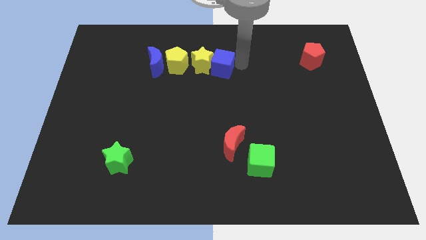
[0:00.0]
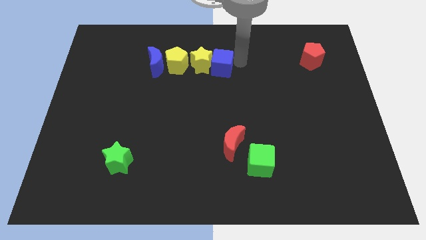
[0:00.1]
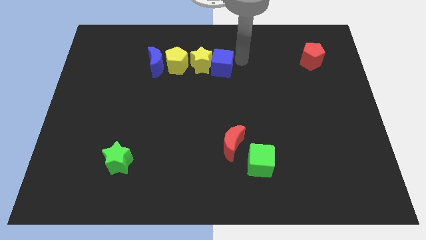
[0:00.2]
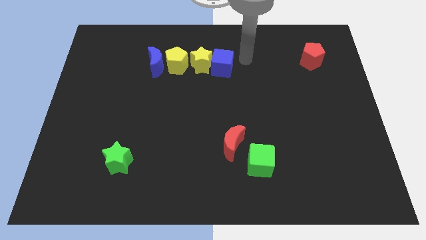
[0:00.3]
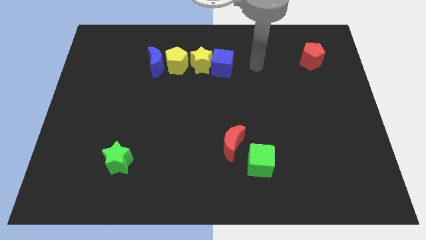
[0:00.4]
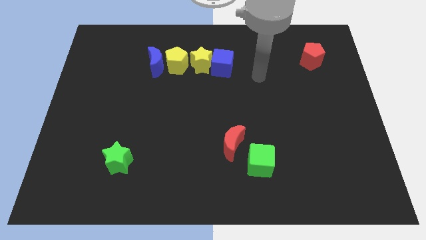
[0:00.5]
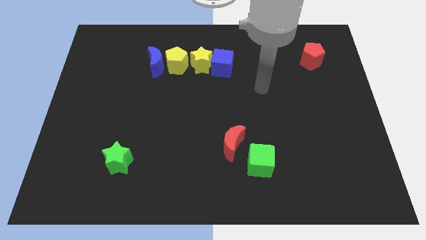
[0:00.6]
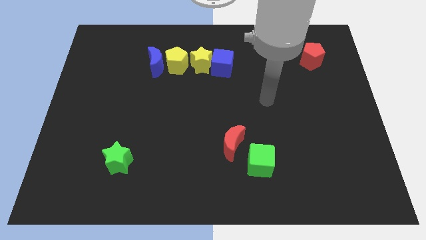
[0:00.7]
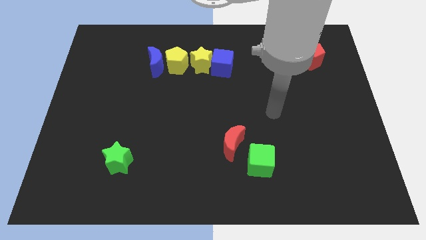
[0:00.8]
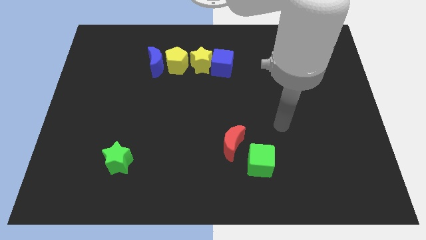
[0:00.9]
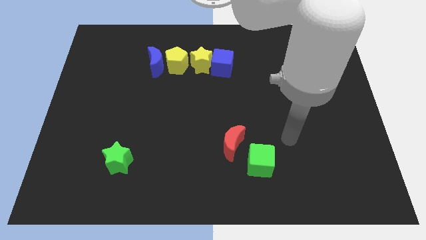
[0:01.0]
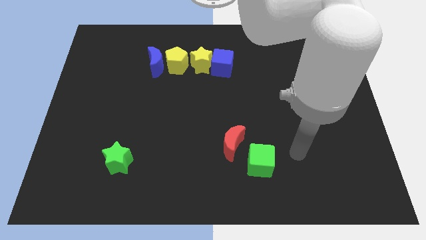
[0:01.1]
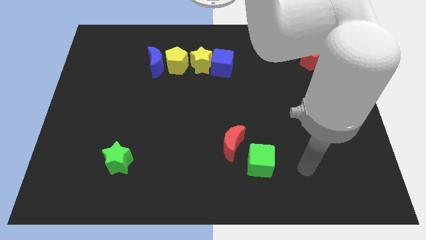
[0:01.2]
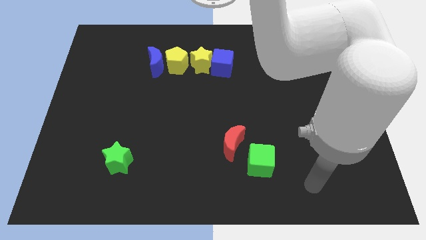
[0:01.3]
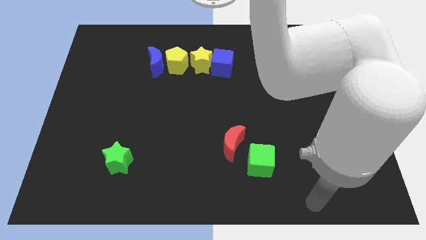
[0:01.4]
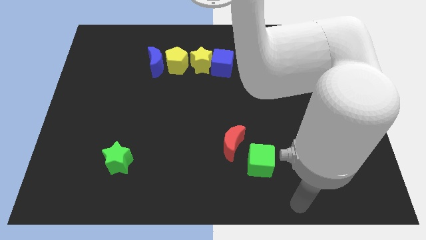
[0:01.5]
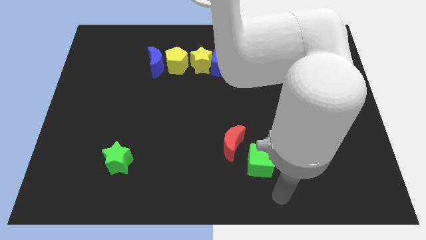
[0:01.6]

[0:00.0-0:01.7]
move your arm away from the blue cube

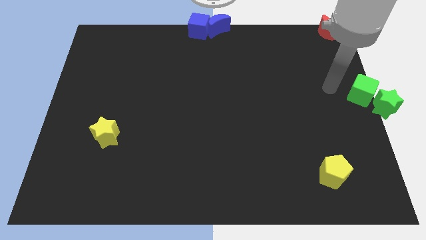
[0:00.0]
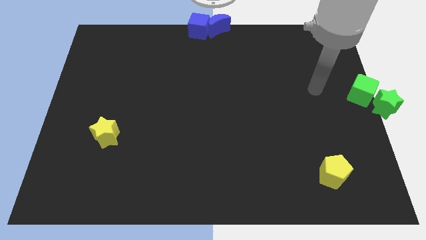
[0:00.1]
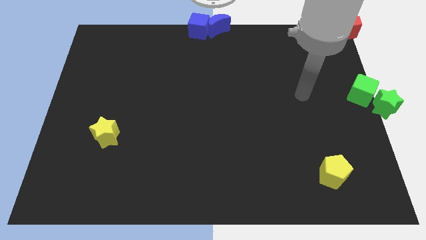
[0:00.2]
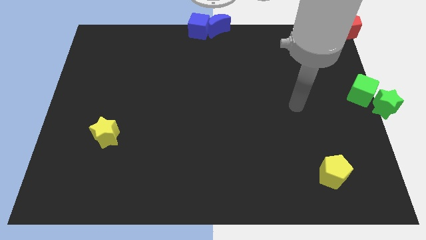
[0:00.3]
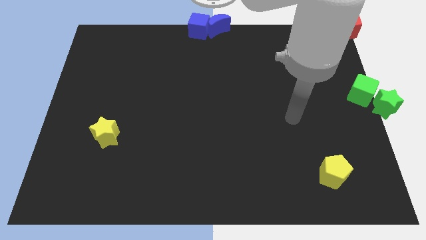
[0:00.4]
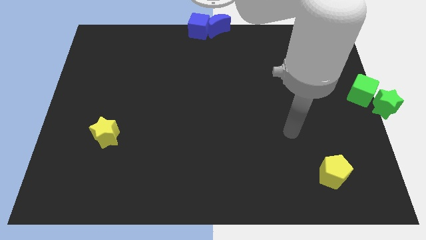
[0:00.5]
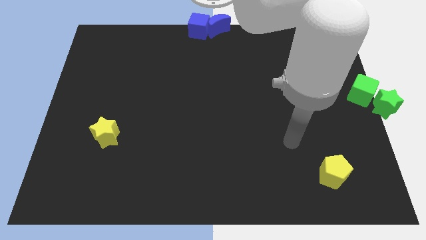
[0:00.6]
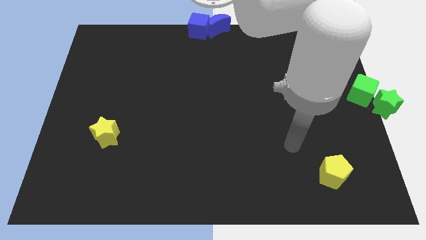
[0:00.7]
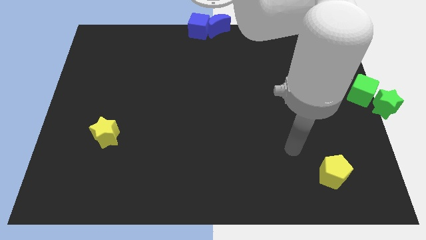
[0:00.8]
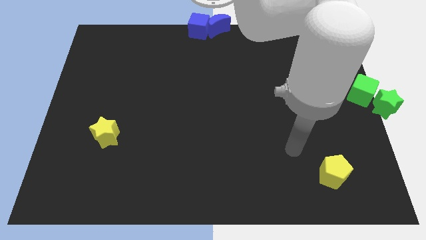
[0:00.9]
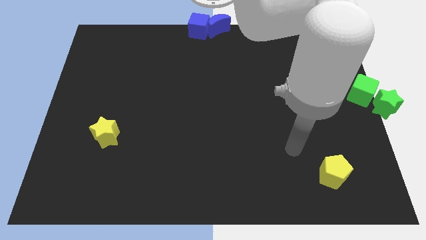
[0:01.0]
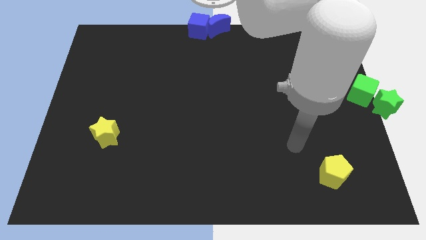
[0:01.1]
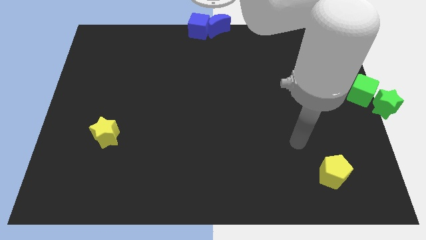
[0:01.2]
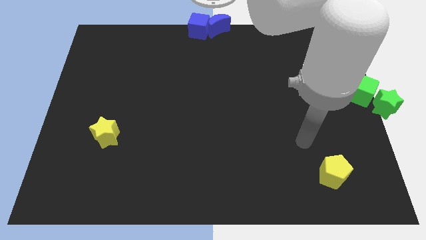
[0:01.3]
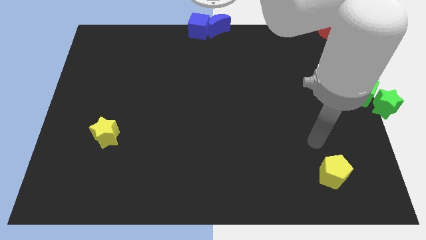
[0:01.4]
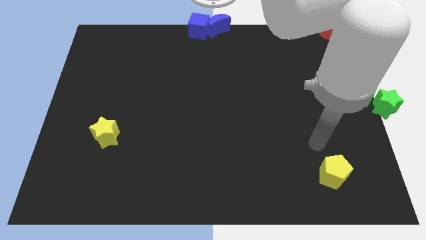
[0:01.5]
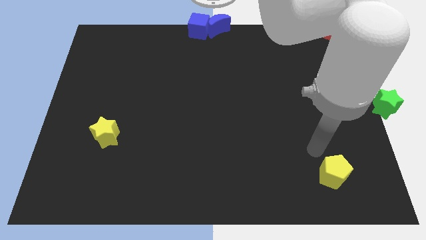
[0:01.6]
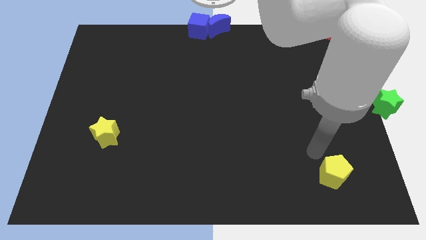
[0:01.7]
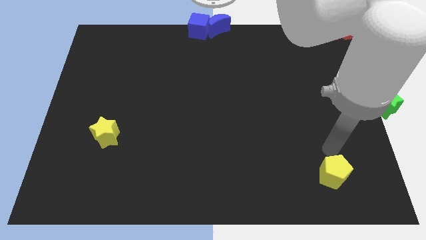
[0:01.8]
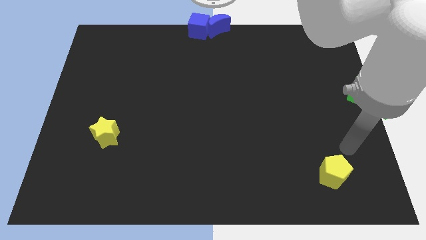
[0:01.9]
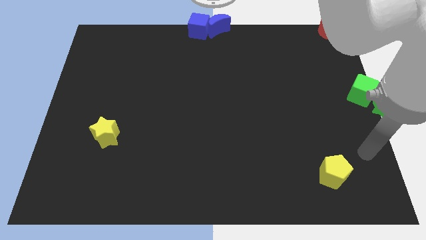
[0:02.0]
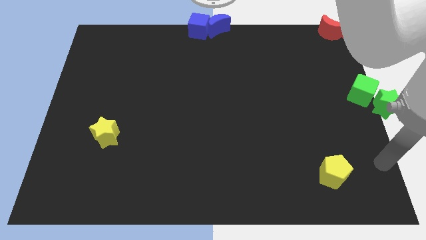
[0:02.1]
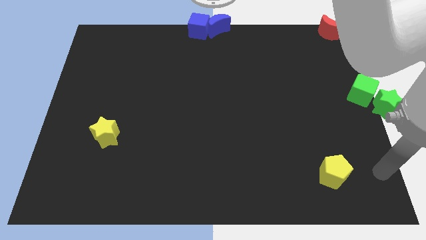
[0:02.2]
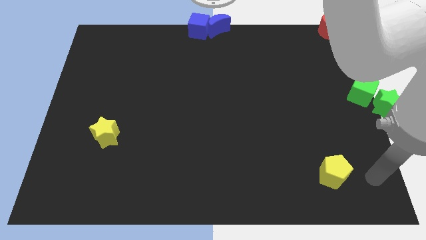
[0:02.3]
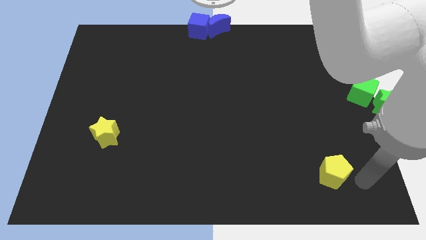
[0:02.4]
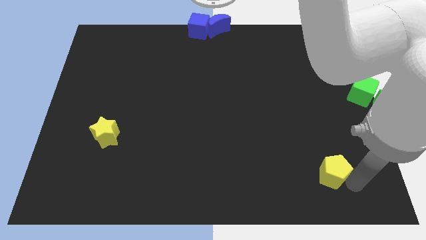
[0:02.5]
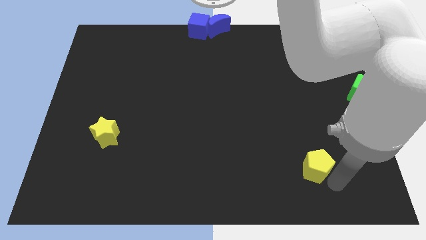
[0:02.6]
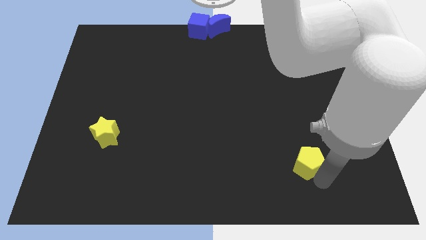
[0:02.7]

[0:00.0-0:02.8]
slightly push the yellow pentagon to the left

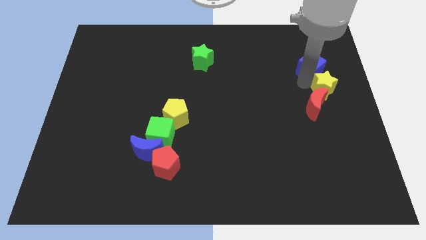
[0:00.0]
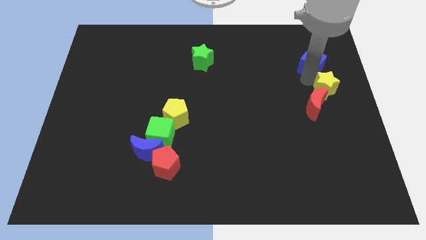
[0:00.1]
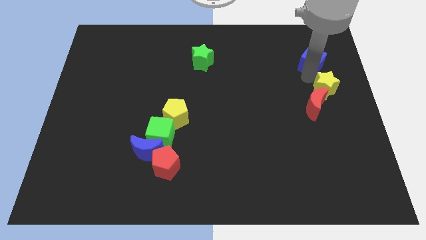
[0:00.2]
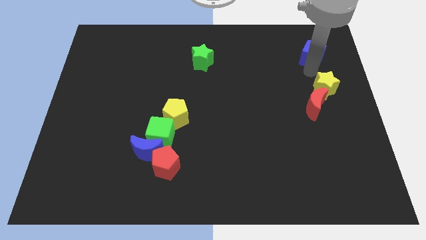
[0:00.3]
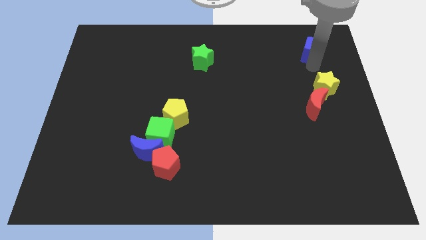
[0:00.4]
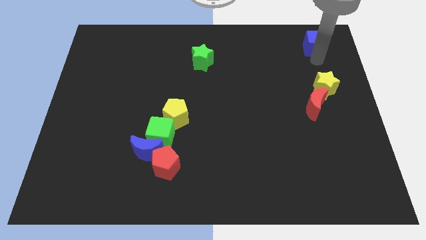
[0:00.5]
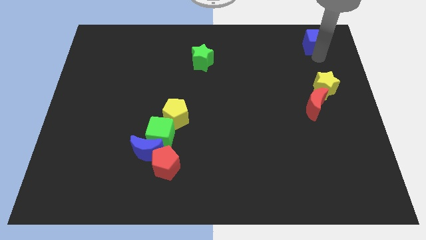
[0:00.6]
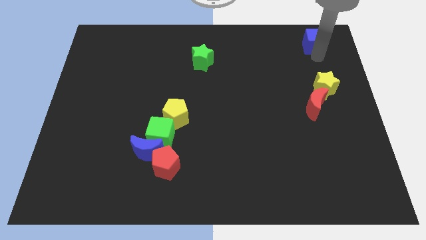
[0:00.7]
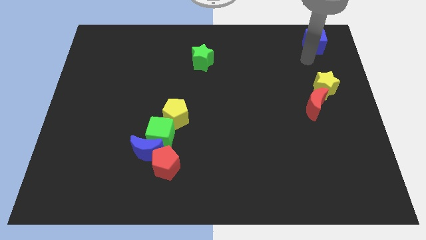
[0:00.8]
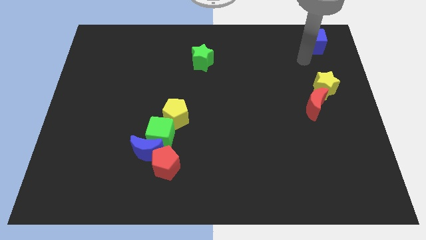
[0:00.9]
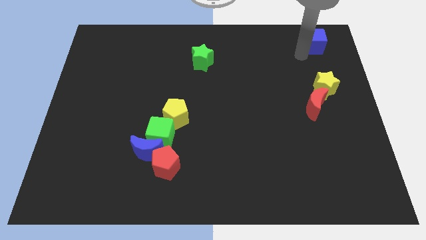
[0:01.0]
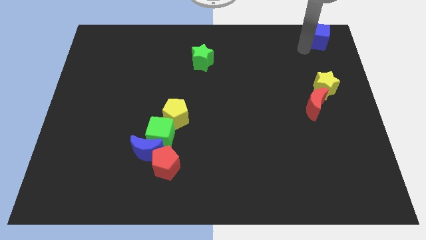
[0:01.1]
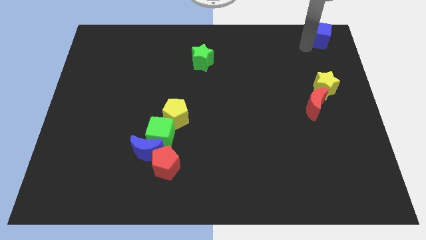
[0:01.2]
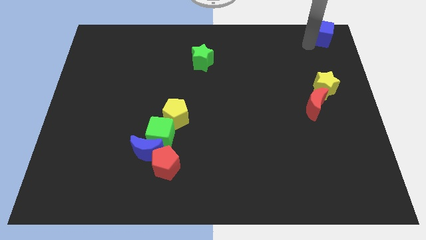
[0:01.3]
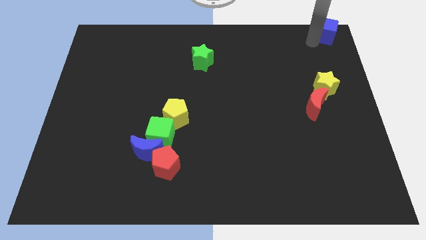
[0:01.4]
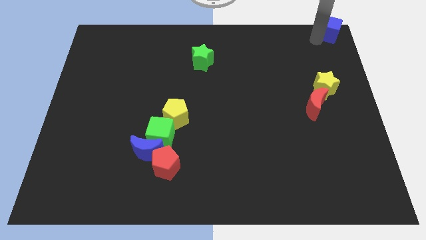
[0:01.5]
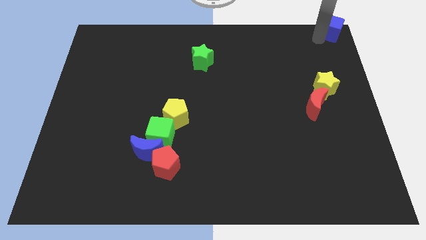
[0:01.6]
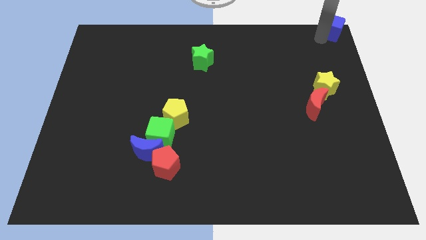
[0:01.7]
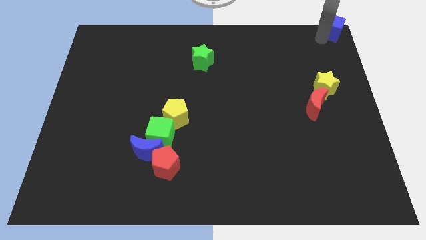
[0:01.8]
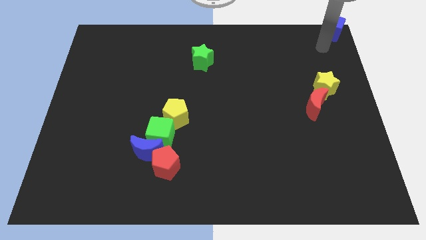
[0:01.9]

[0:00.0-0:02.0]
push the blue cube towards the top right of the board

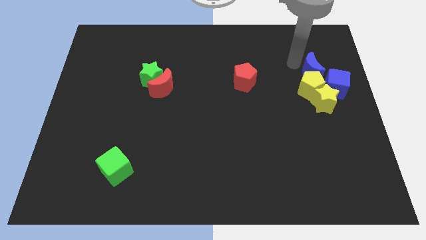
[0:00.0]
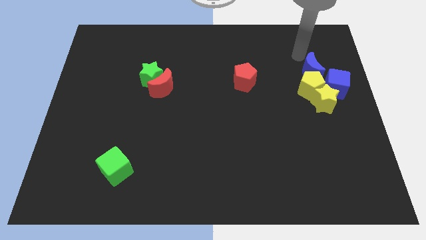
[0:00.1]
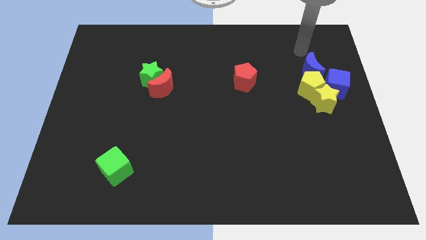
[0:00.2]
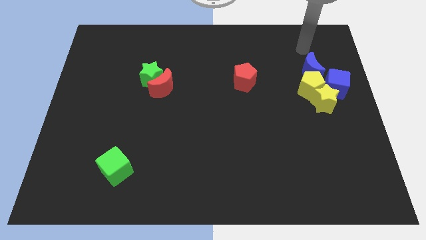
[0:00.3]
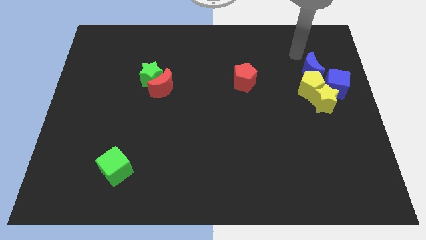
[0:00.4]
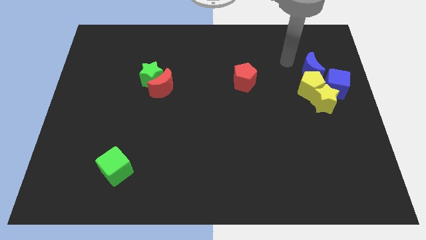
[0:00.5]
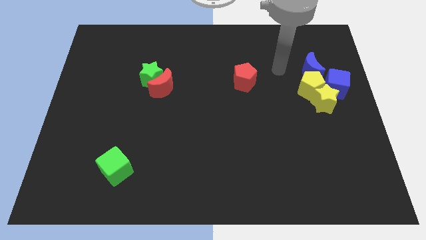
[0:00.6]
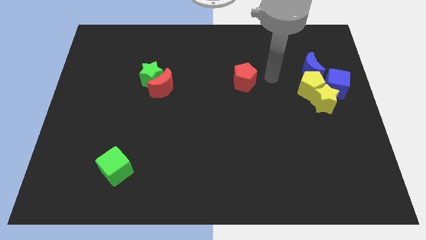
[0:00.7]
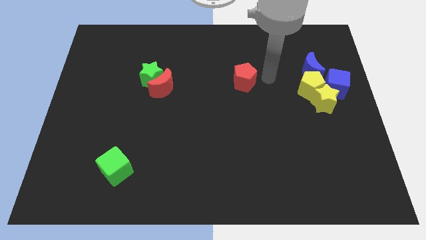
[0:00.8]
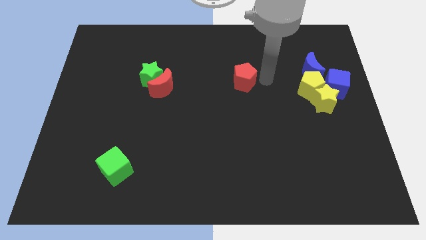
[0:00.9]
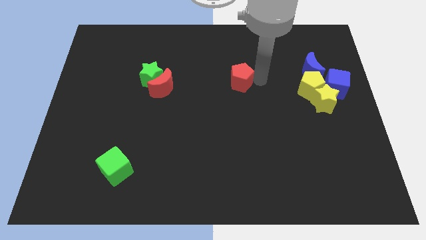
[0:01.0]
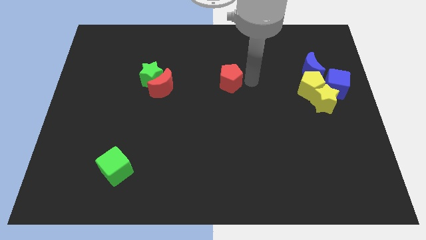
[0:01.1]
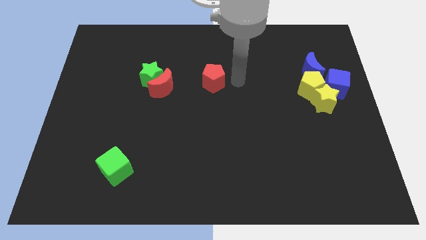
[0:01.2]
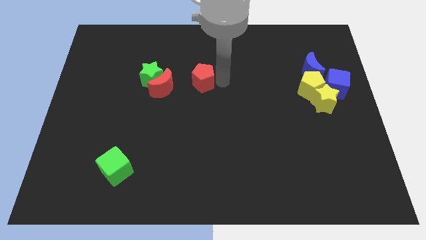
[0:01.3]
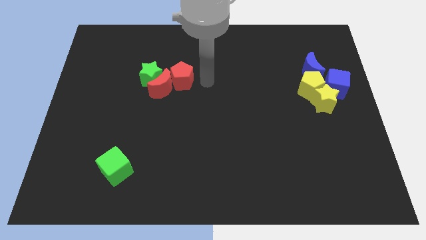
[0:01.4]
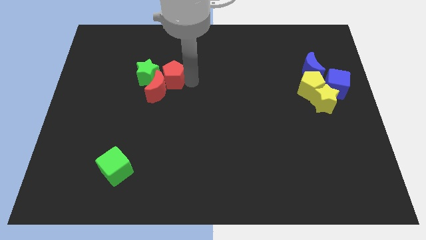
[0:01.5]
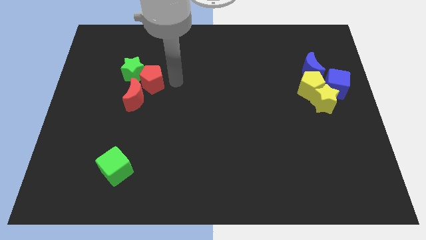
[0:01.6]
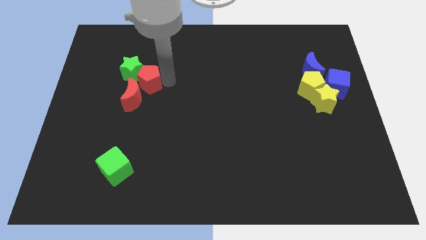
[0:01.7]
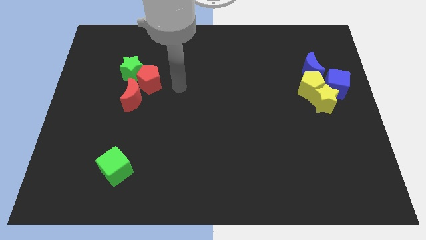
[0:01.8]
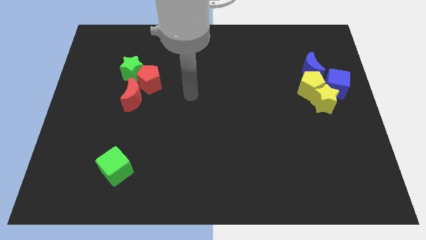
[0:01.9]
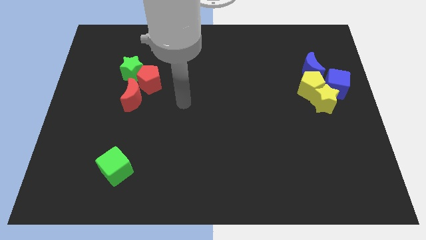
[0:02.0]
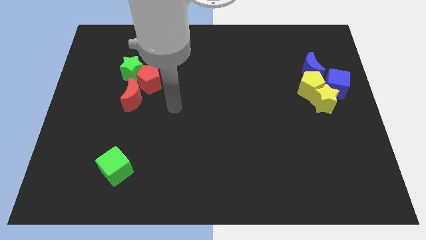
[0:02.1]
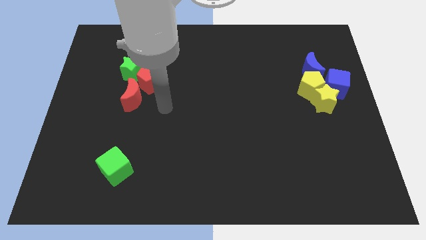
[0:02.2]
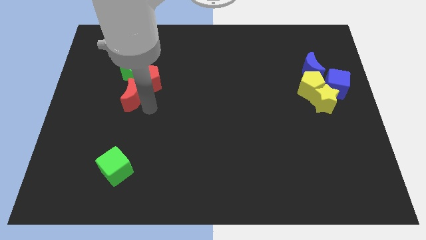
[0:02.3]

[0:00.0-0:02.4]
push the red pentagon into the green star

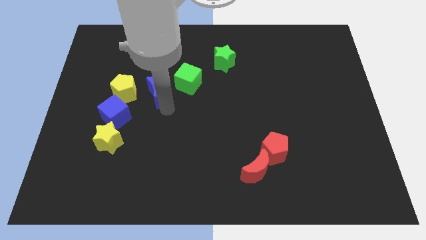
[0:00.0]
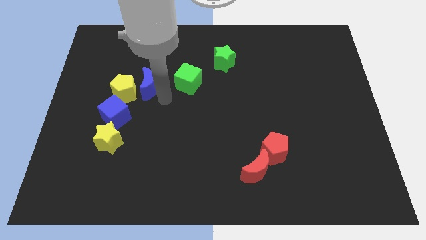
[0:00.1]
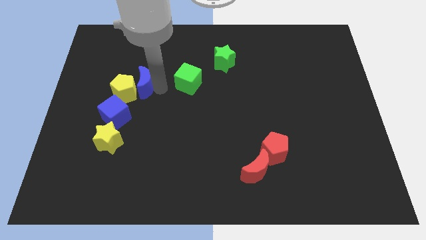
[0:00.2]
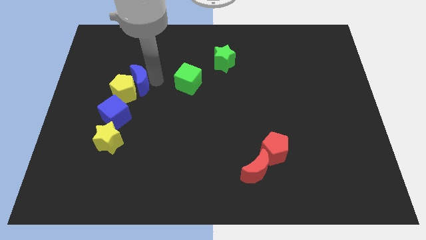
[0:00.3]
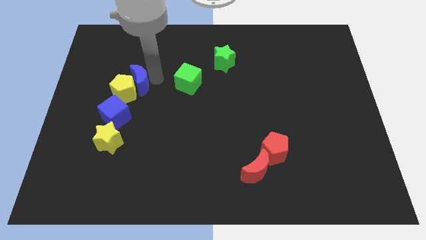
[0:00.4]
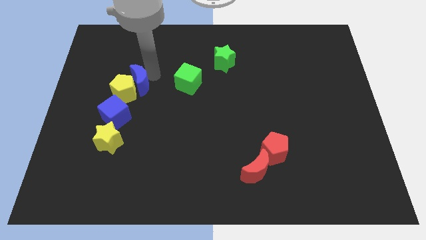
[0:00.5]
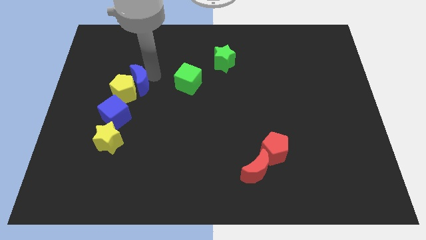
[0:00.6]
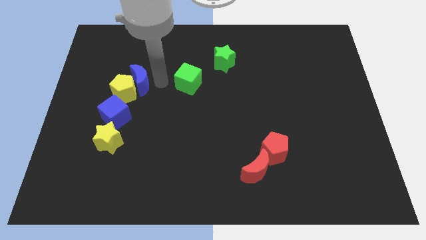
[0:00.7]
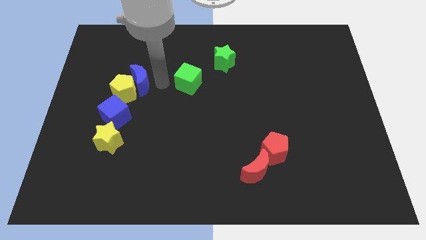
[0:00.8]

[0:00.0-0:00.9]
point your arm between green cube and blue moon
